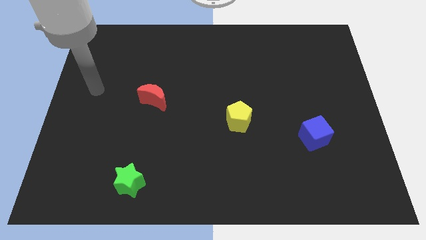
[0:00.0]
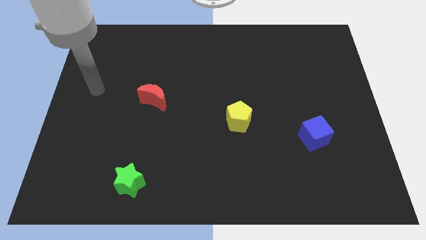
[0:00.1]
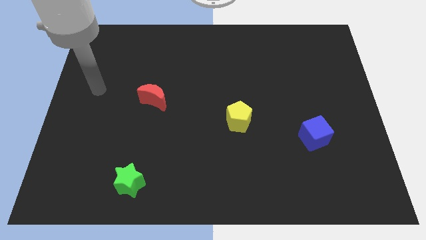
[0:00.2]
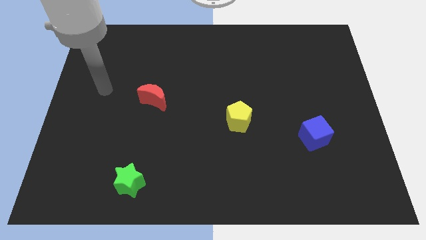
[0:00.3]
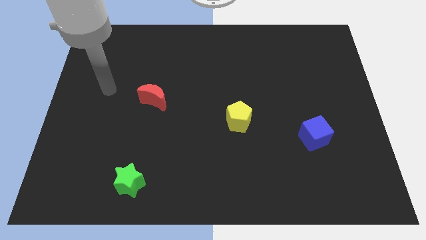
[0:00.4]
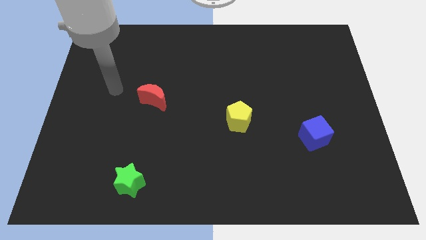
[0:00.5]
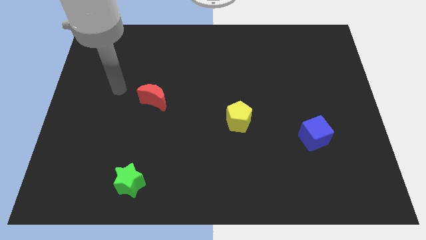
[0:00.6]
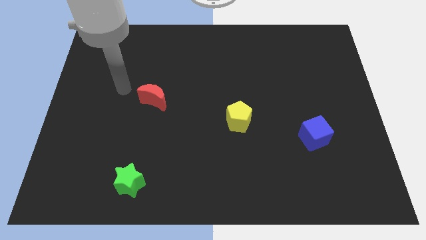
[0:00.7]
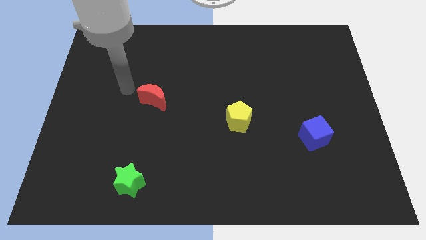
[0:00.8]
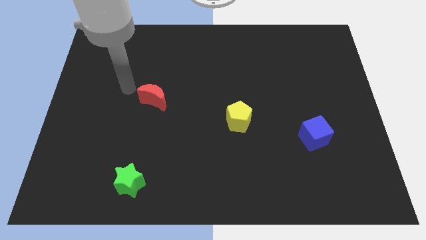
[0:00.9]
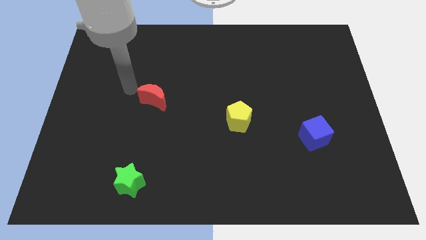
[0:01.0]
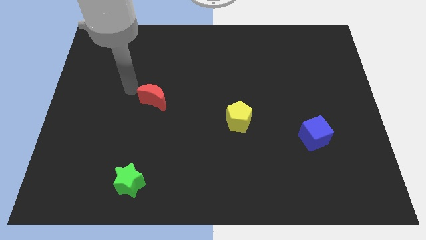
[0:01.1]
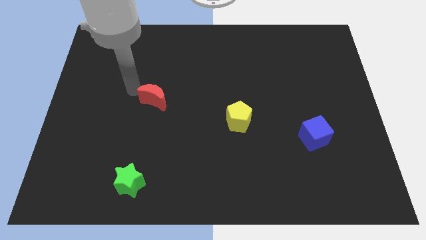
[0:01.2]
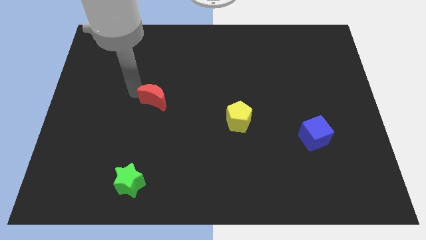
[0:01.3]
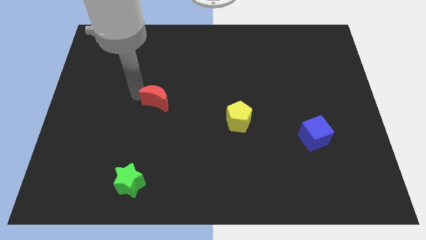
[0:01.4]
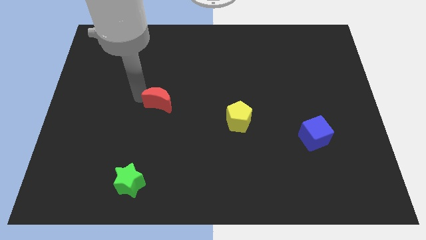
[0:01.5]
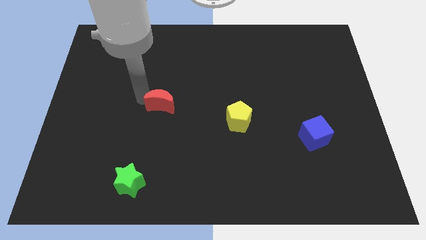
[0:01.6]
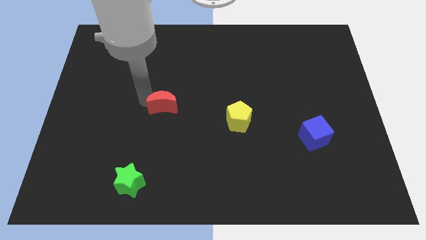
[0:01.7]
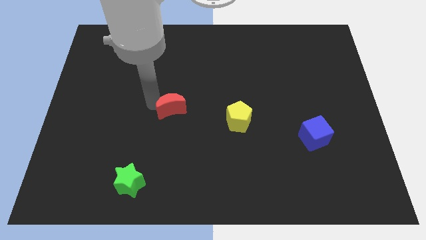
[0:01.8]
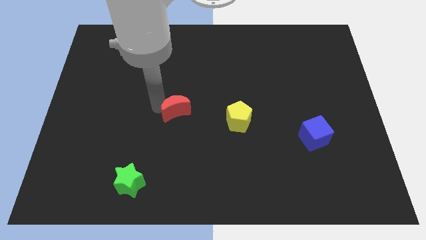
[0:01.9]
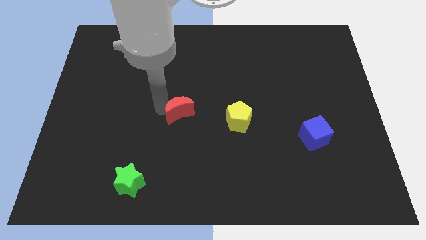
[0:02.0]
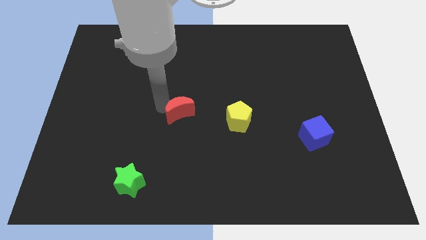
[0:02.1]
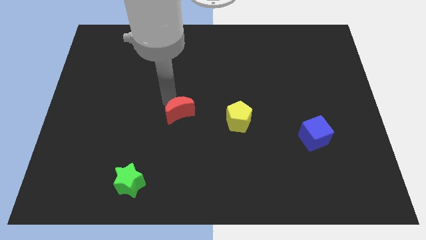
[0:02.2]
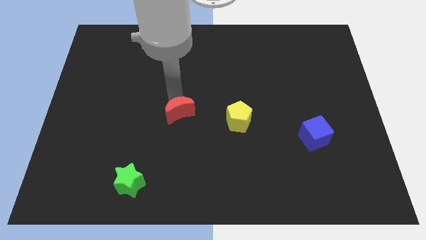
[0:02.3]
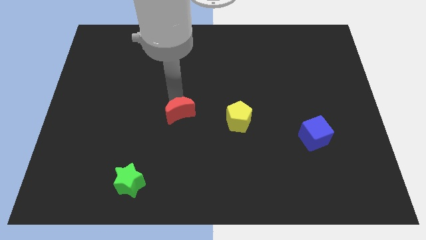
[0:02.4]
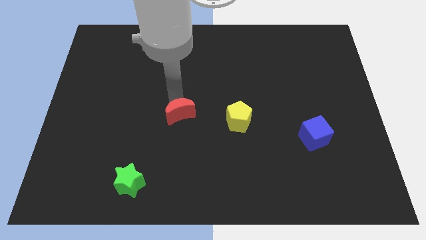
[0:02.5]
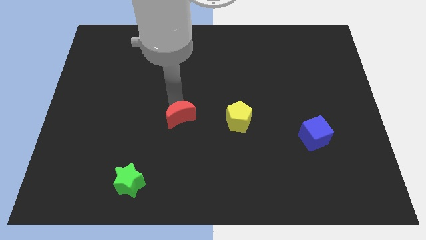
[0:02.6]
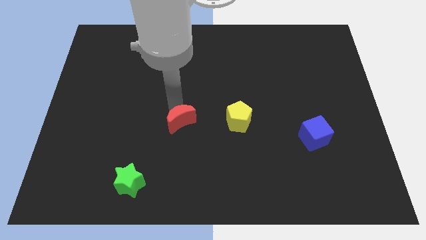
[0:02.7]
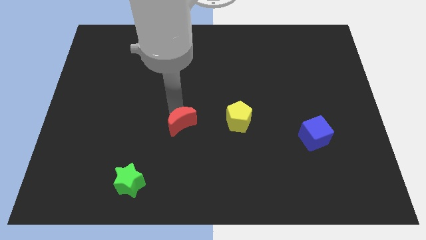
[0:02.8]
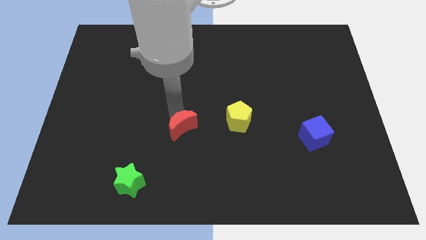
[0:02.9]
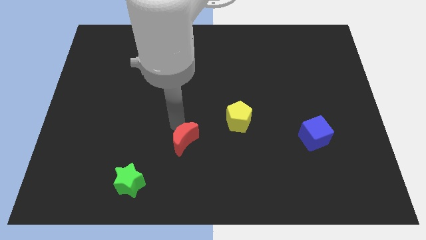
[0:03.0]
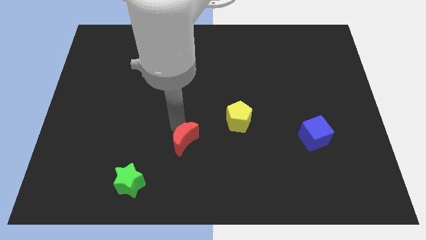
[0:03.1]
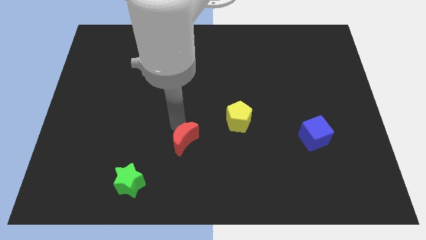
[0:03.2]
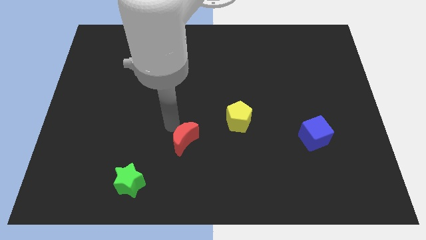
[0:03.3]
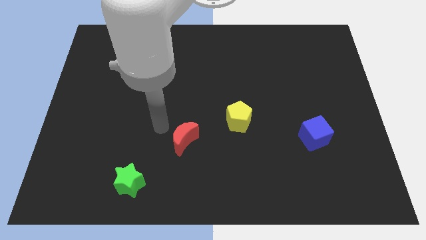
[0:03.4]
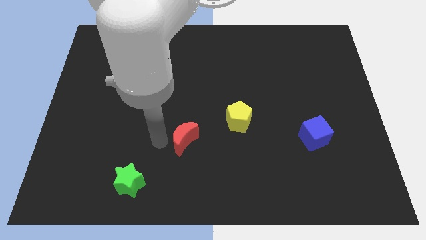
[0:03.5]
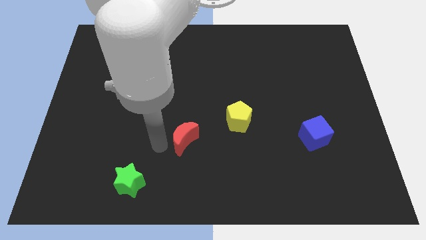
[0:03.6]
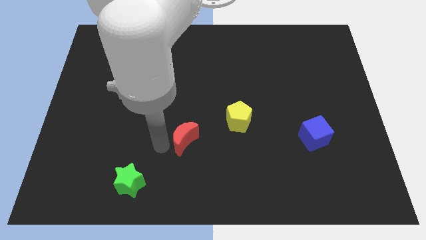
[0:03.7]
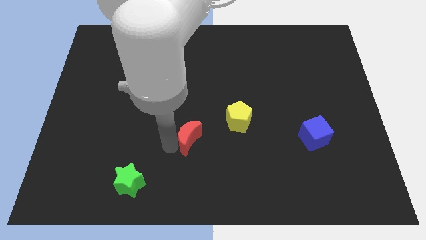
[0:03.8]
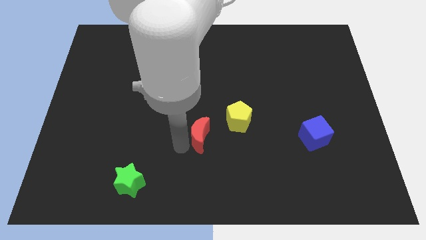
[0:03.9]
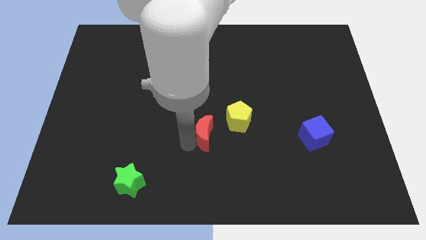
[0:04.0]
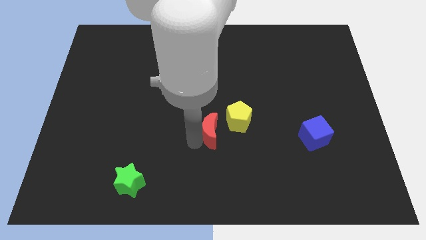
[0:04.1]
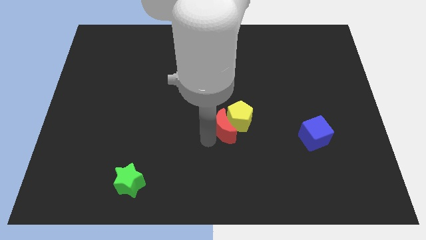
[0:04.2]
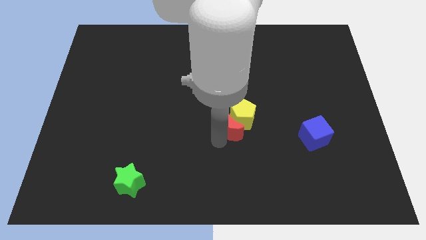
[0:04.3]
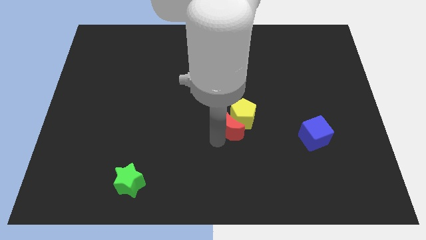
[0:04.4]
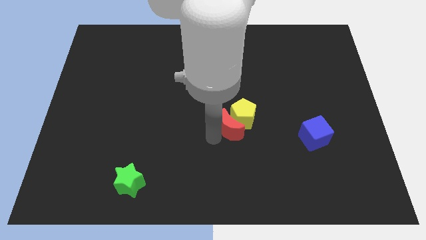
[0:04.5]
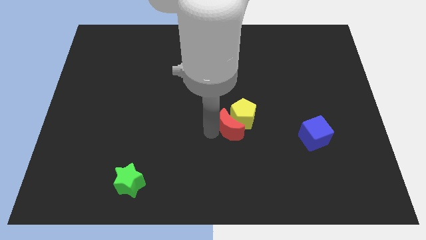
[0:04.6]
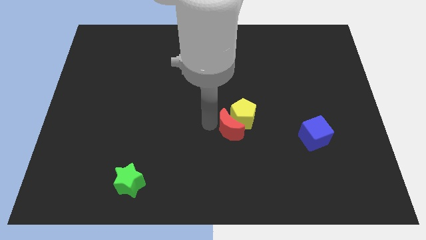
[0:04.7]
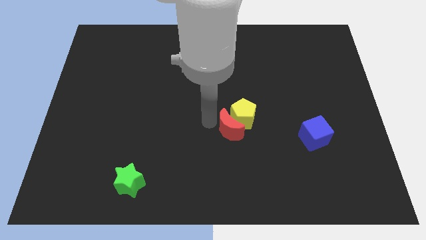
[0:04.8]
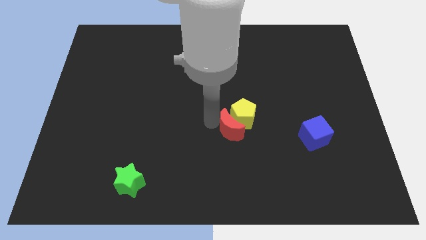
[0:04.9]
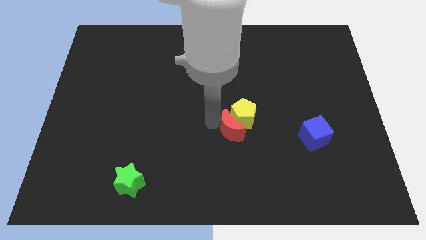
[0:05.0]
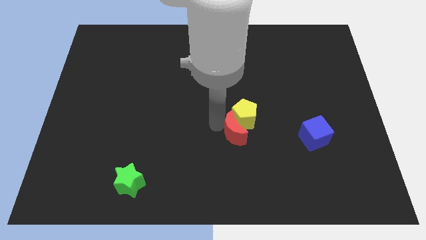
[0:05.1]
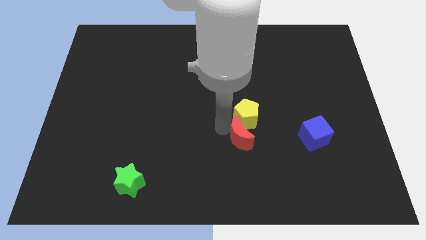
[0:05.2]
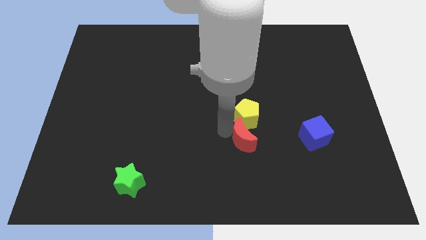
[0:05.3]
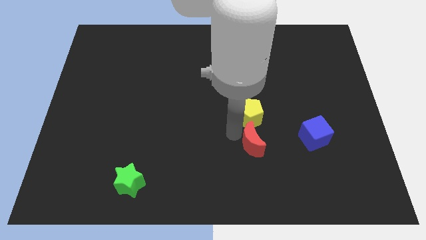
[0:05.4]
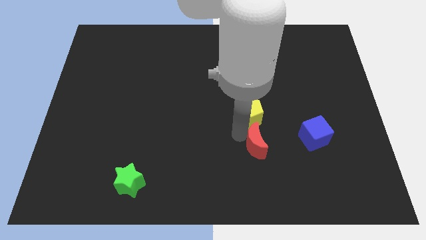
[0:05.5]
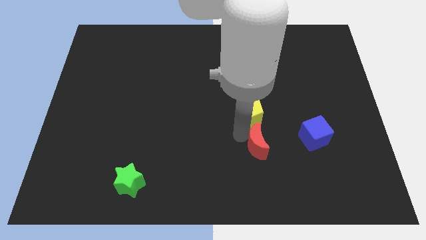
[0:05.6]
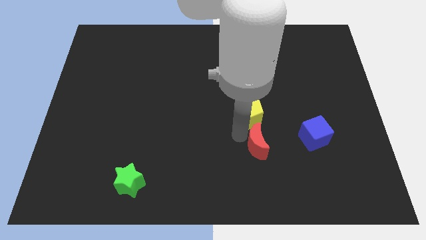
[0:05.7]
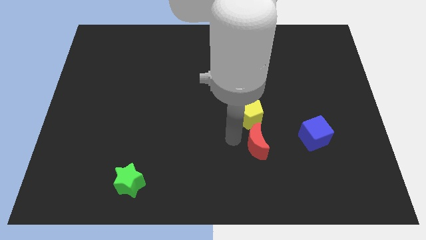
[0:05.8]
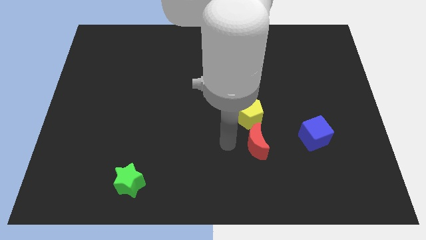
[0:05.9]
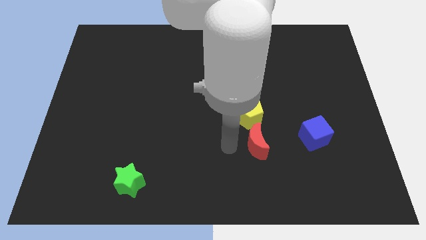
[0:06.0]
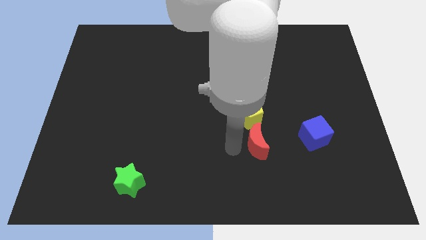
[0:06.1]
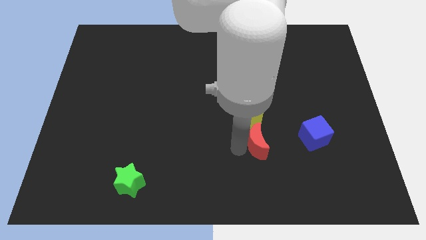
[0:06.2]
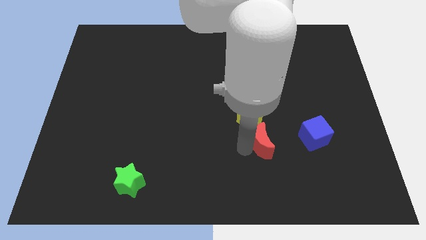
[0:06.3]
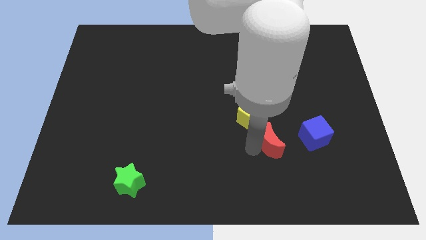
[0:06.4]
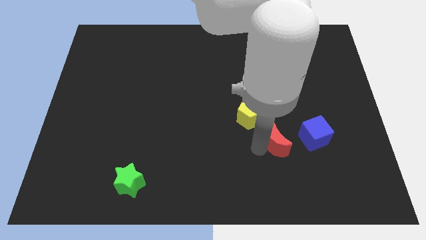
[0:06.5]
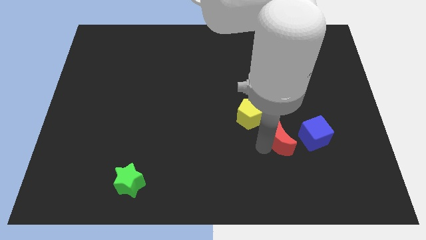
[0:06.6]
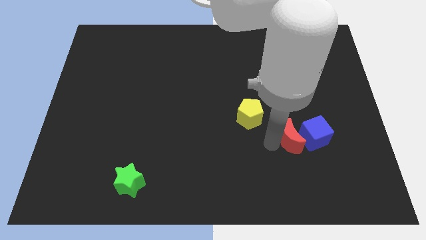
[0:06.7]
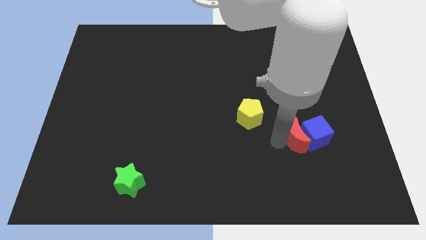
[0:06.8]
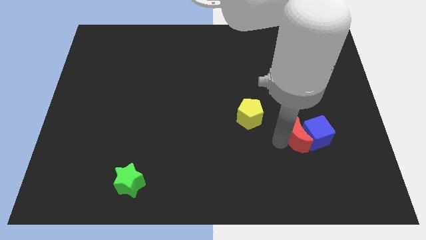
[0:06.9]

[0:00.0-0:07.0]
put the red moon next to the cube

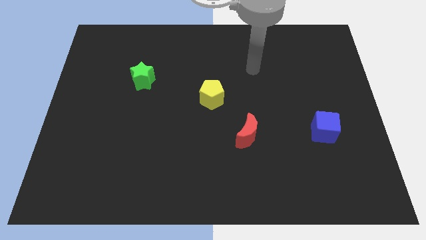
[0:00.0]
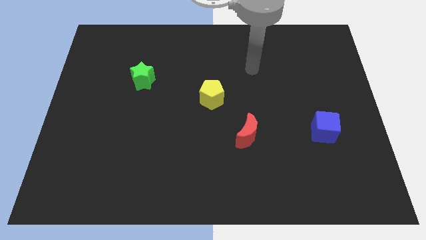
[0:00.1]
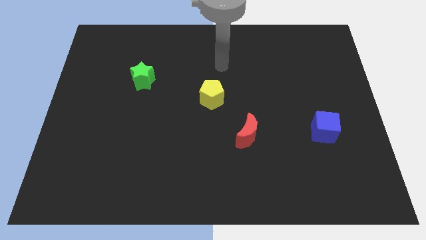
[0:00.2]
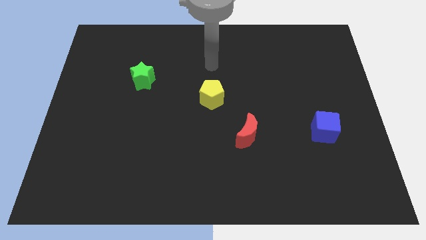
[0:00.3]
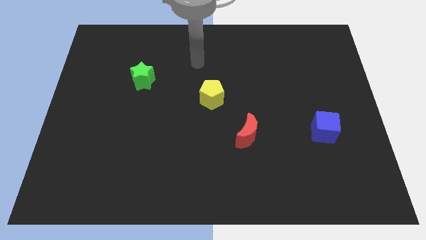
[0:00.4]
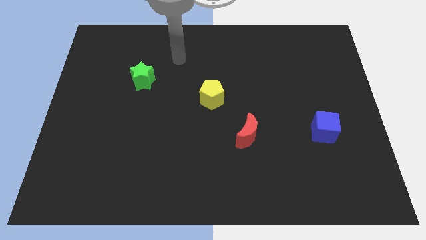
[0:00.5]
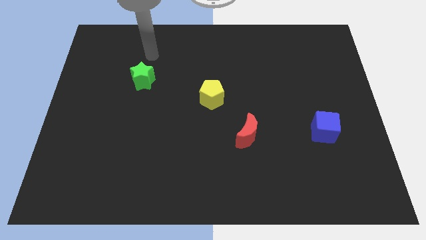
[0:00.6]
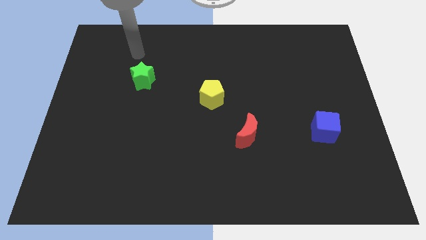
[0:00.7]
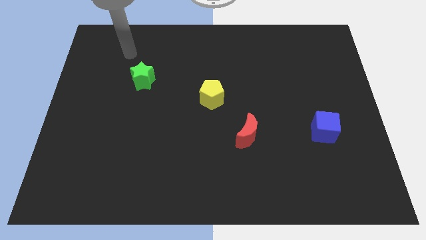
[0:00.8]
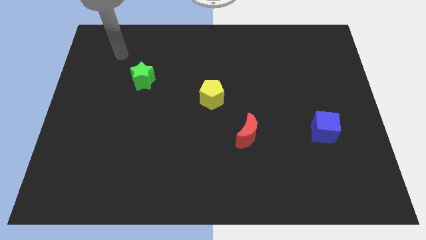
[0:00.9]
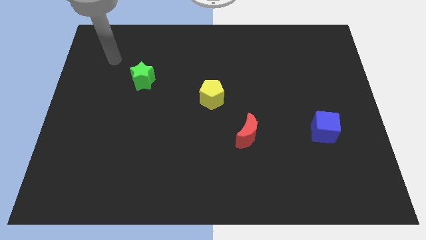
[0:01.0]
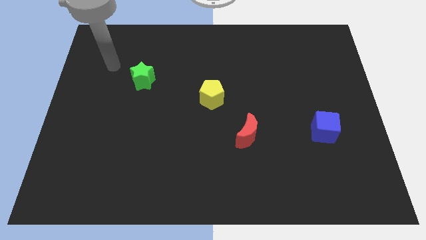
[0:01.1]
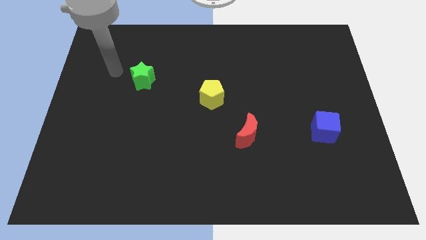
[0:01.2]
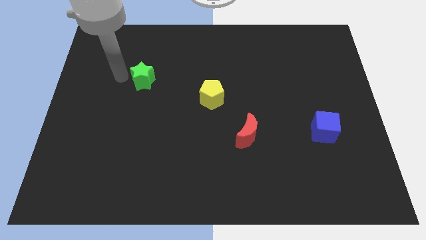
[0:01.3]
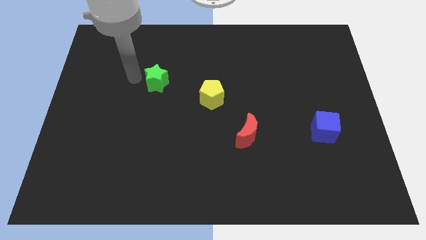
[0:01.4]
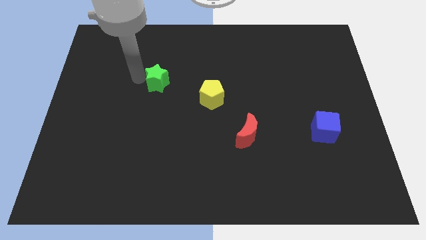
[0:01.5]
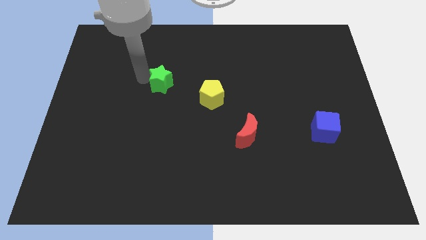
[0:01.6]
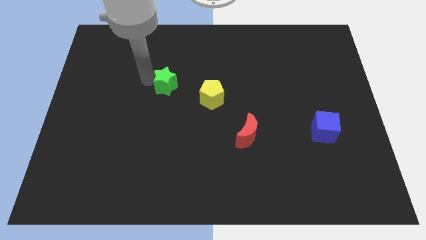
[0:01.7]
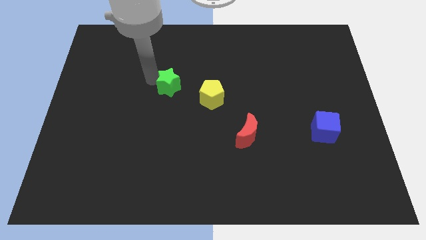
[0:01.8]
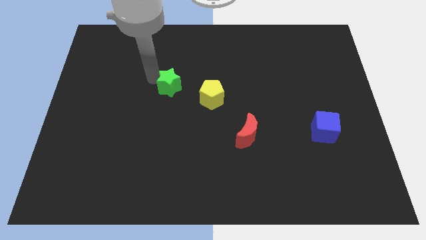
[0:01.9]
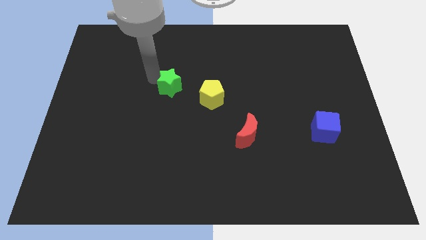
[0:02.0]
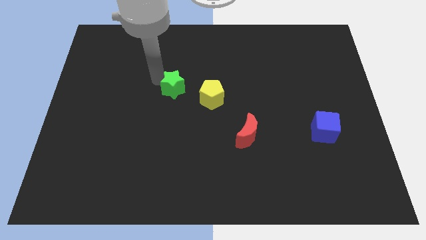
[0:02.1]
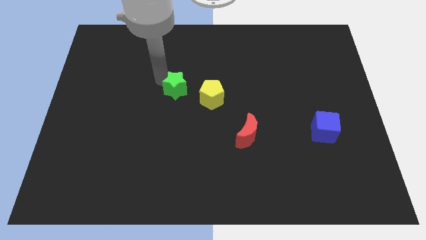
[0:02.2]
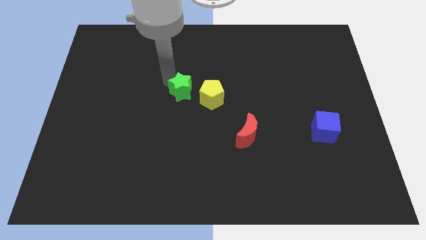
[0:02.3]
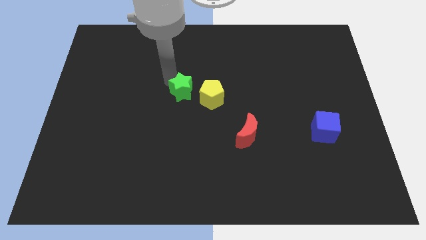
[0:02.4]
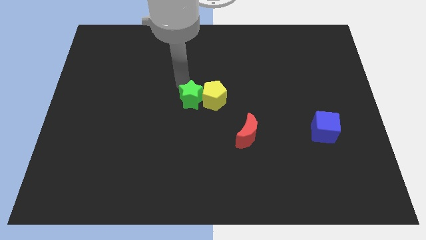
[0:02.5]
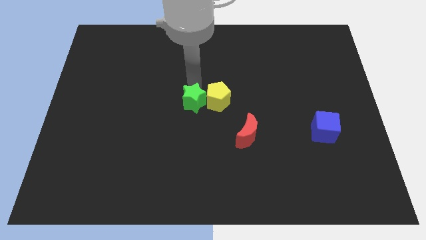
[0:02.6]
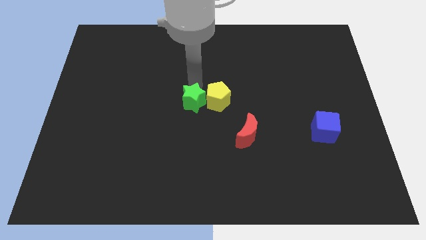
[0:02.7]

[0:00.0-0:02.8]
push the green star to the yellow pentagon
